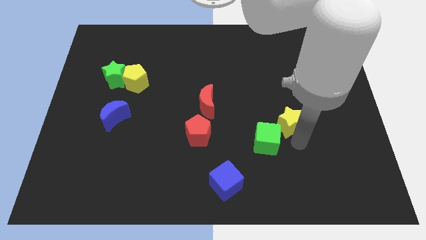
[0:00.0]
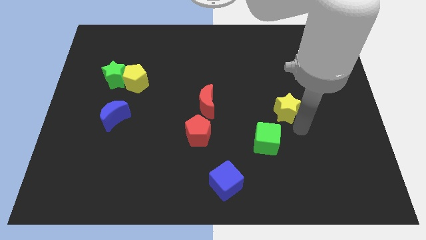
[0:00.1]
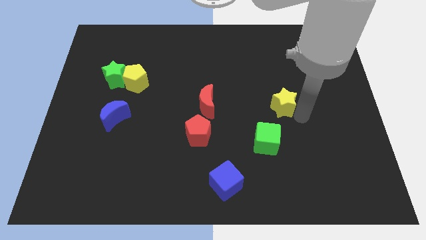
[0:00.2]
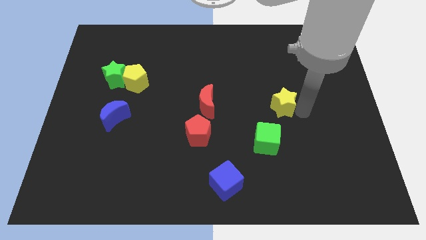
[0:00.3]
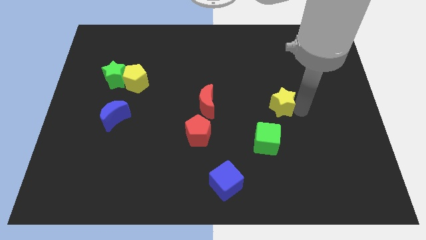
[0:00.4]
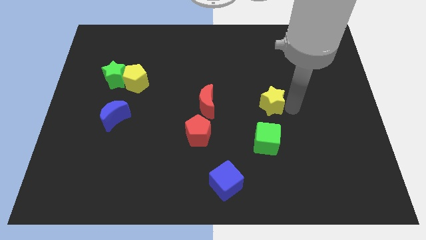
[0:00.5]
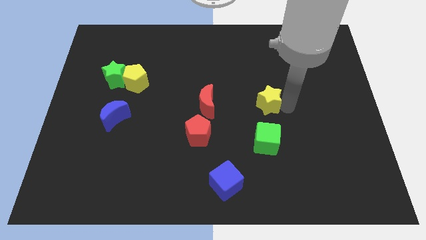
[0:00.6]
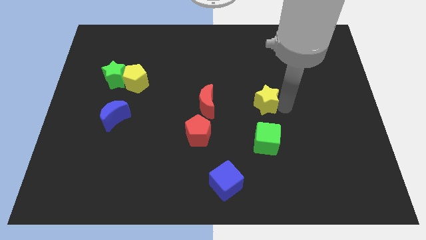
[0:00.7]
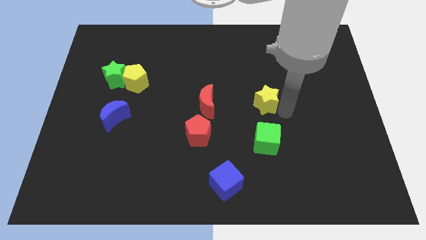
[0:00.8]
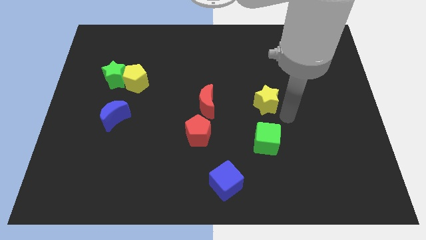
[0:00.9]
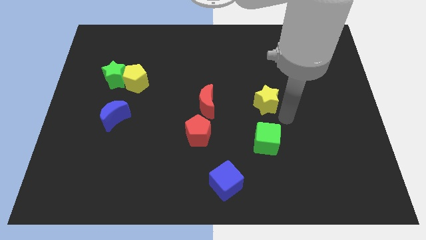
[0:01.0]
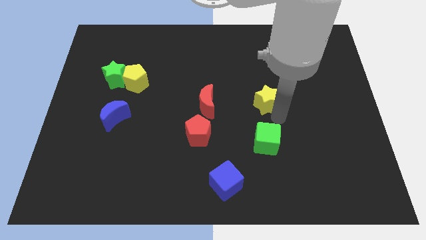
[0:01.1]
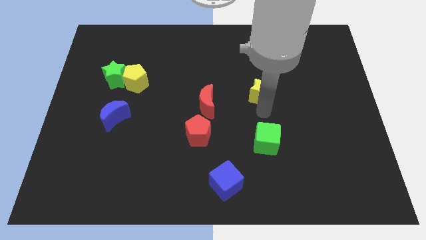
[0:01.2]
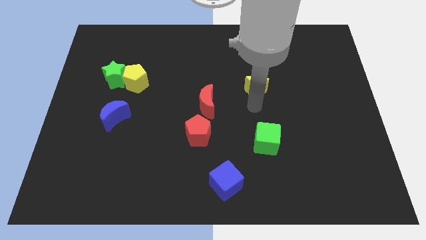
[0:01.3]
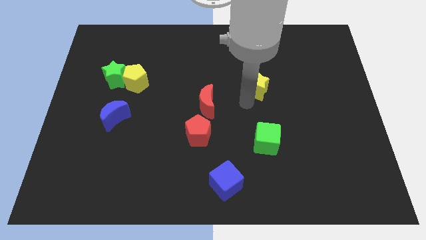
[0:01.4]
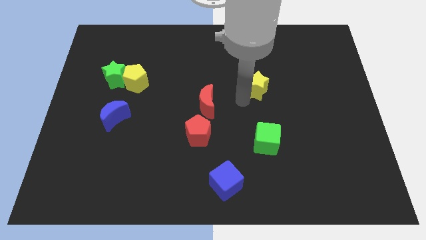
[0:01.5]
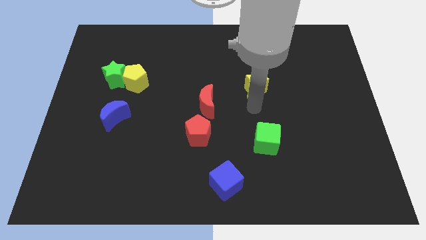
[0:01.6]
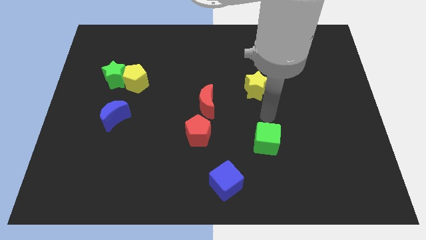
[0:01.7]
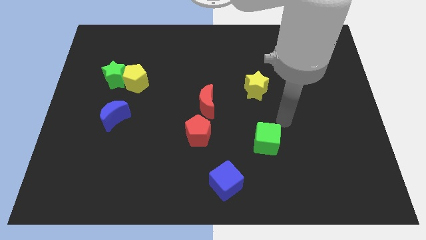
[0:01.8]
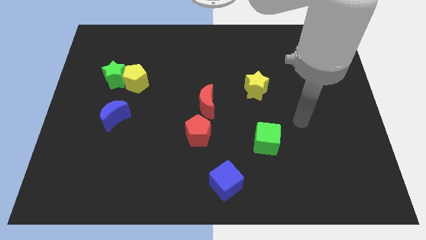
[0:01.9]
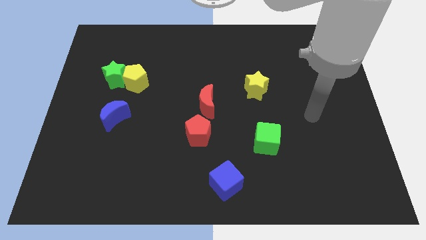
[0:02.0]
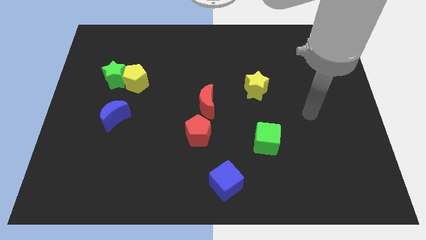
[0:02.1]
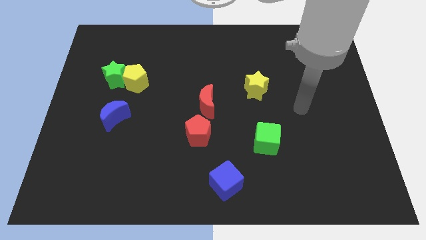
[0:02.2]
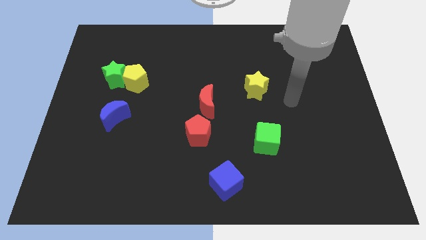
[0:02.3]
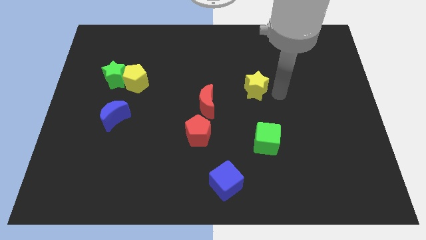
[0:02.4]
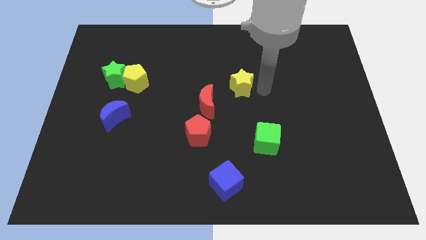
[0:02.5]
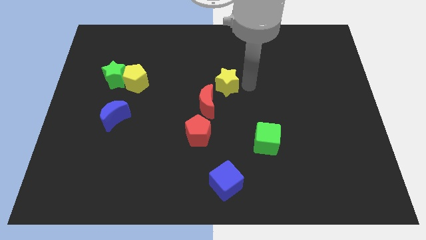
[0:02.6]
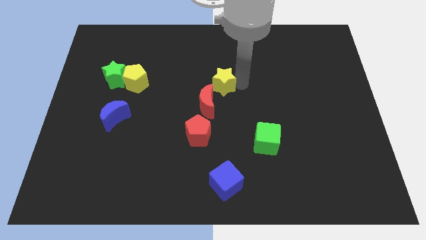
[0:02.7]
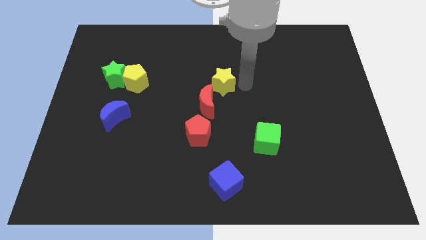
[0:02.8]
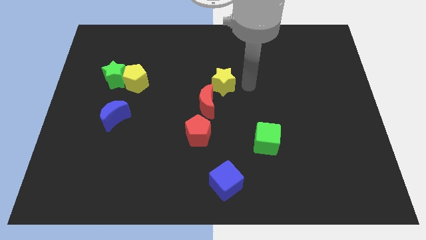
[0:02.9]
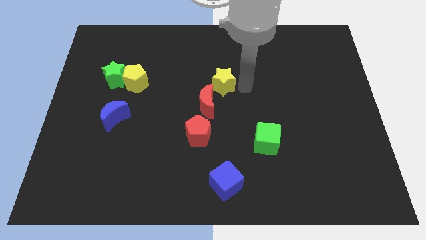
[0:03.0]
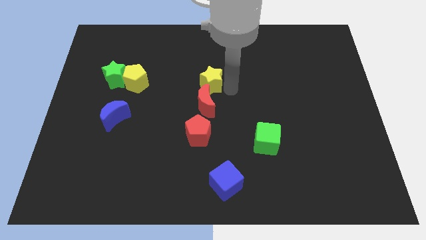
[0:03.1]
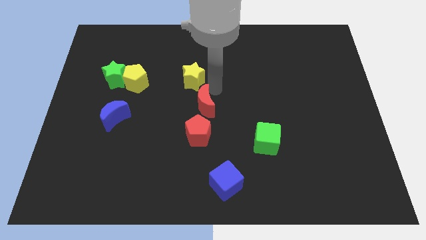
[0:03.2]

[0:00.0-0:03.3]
put the yellow star on the top side of the red crescent

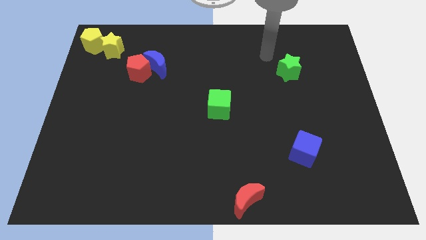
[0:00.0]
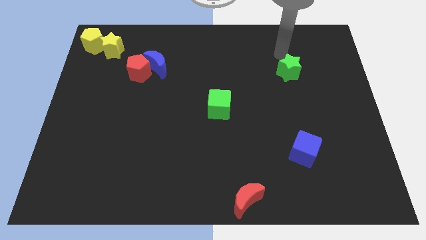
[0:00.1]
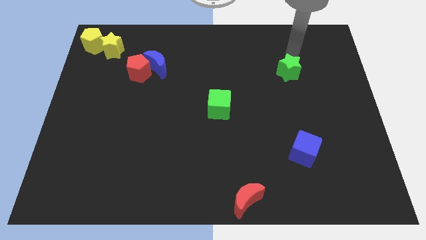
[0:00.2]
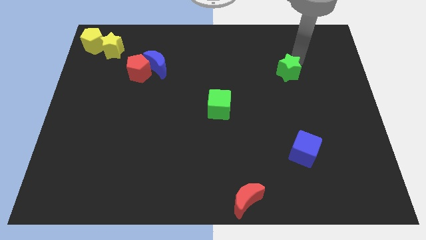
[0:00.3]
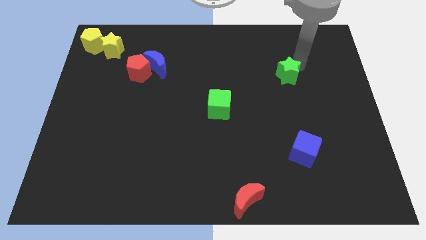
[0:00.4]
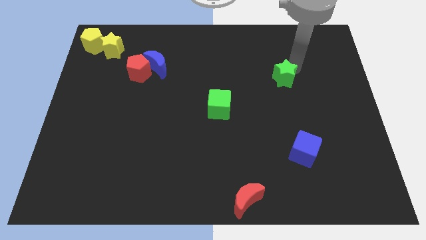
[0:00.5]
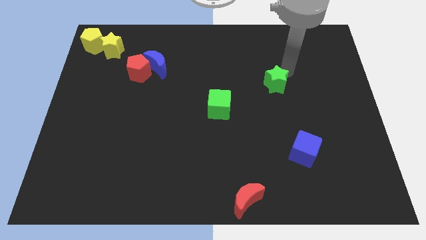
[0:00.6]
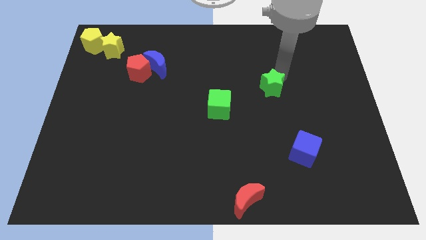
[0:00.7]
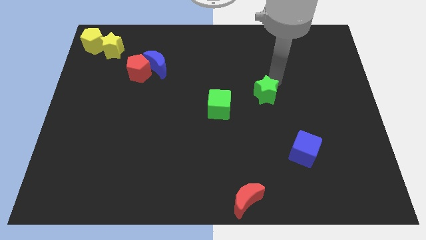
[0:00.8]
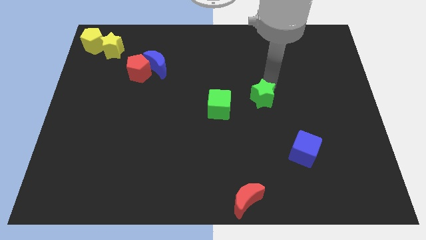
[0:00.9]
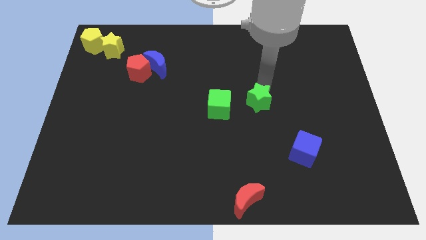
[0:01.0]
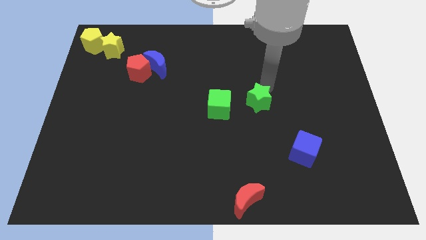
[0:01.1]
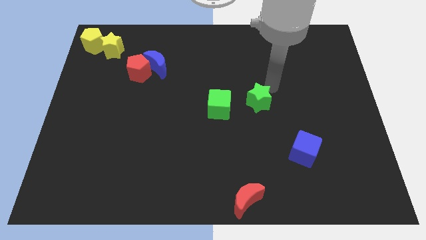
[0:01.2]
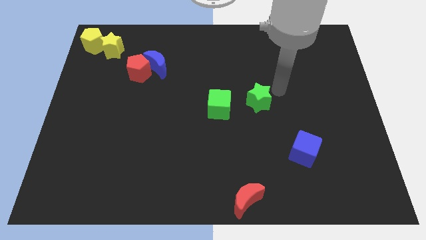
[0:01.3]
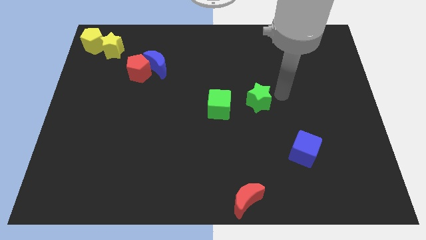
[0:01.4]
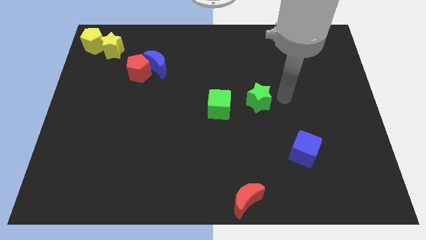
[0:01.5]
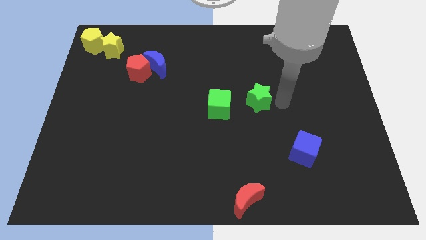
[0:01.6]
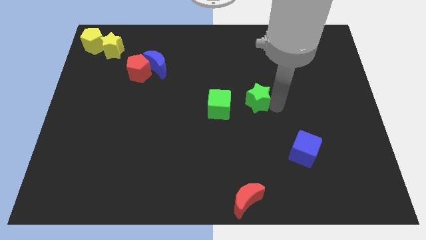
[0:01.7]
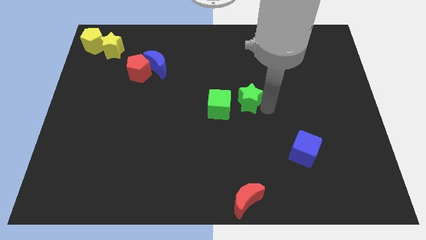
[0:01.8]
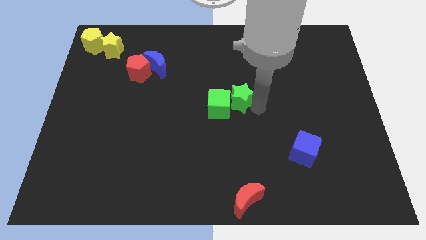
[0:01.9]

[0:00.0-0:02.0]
move green star right to the green cube

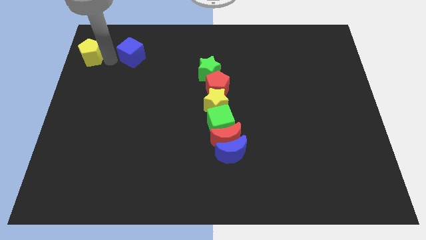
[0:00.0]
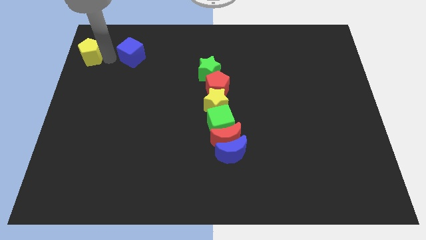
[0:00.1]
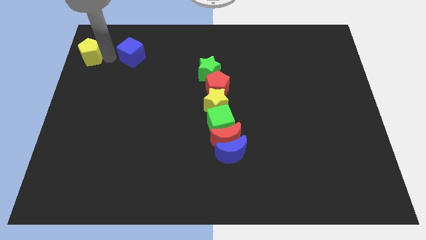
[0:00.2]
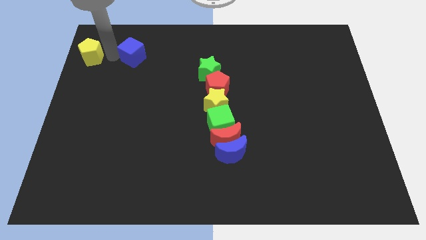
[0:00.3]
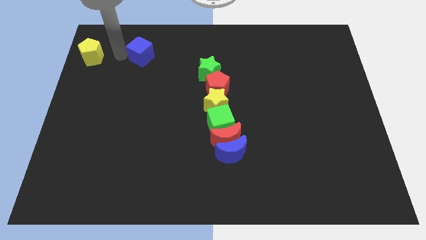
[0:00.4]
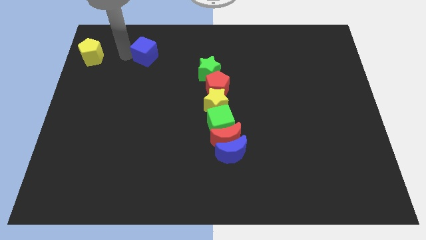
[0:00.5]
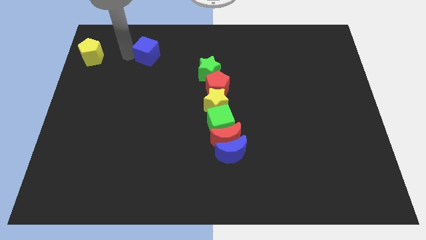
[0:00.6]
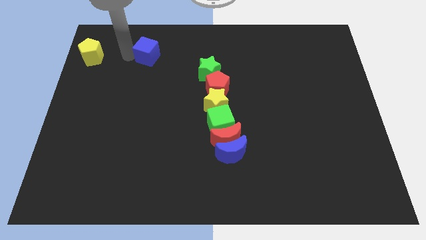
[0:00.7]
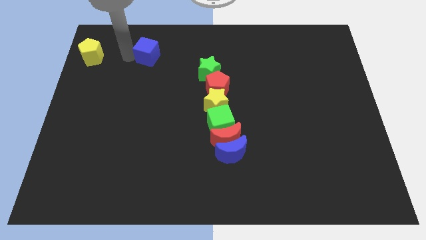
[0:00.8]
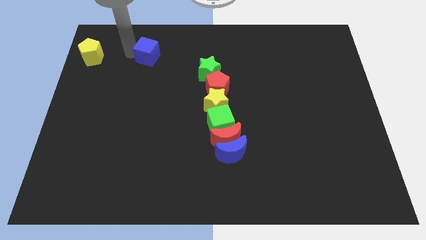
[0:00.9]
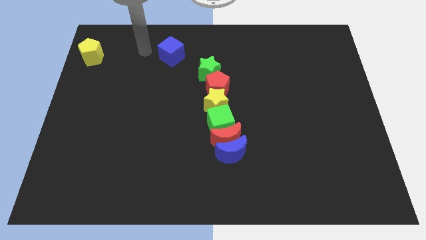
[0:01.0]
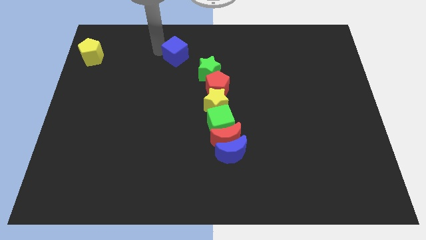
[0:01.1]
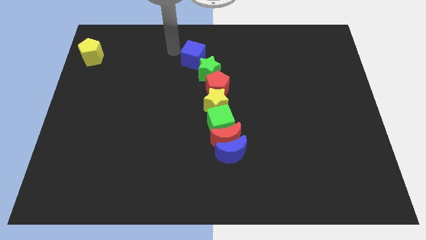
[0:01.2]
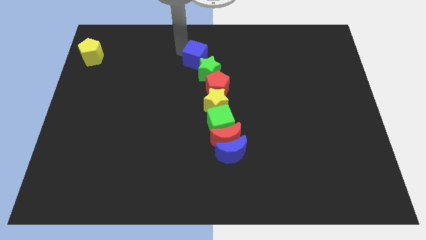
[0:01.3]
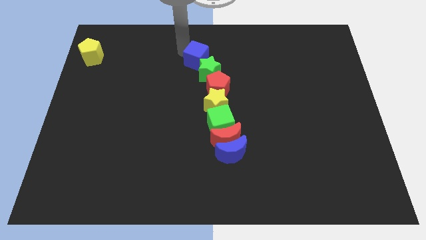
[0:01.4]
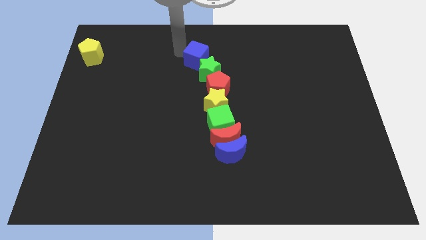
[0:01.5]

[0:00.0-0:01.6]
place the blue cube above the green star

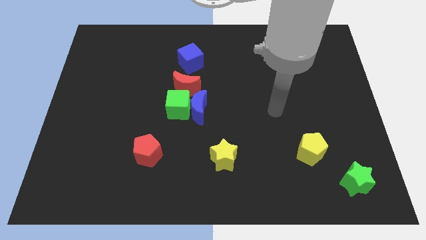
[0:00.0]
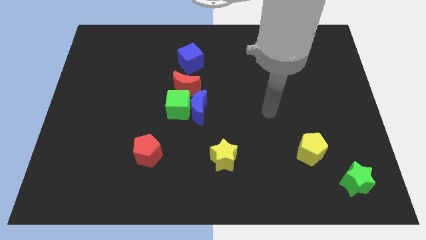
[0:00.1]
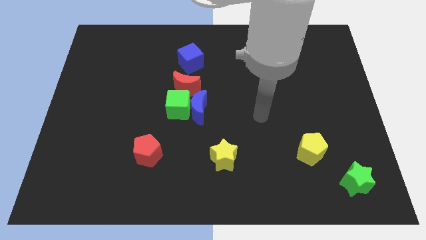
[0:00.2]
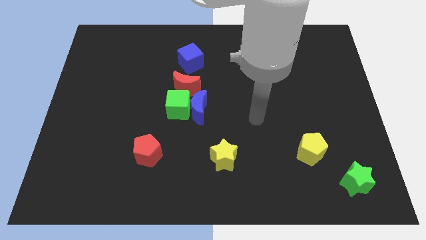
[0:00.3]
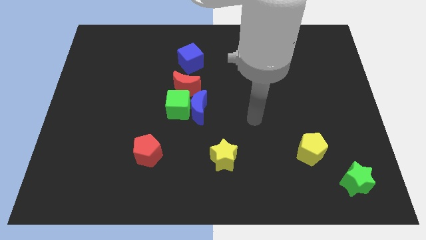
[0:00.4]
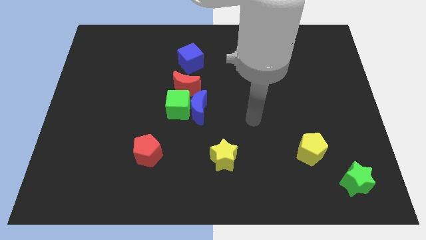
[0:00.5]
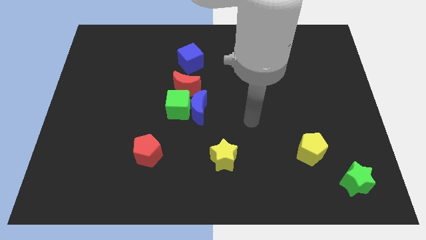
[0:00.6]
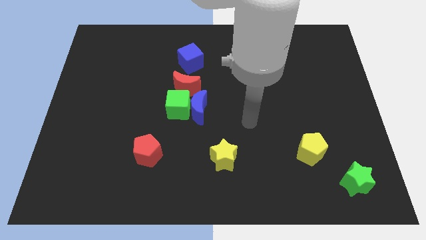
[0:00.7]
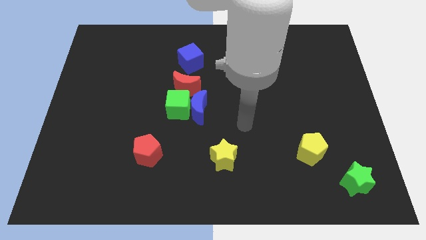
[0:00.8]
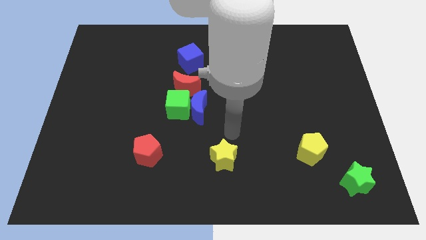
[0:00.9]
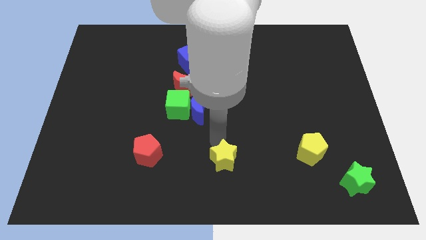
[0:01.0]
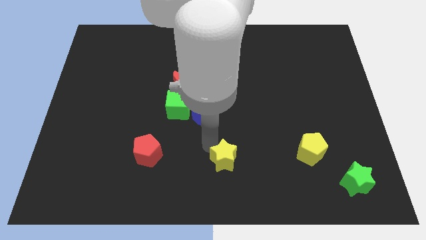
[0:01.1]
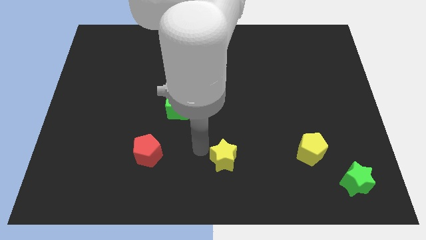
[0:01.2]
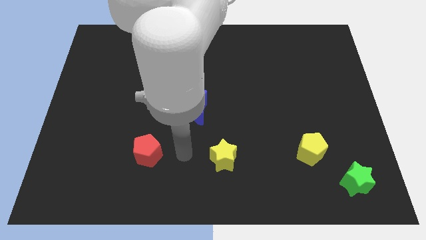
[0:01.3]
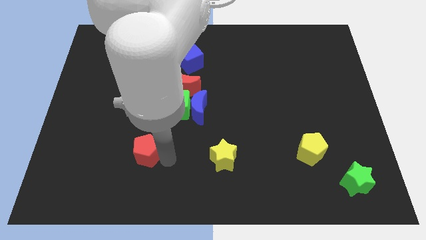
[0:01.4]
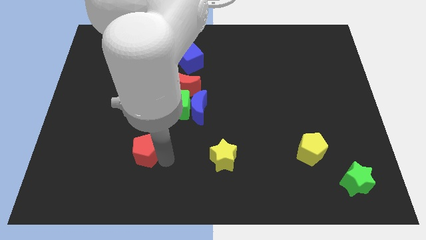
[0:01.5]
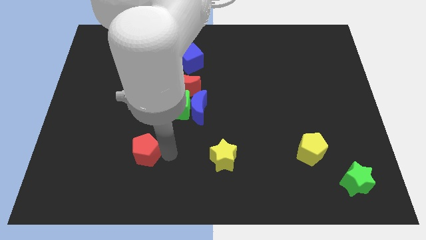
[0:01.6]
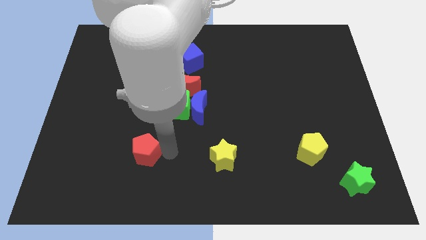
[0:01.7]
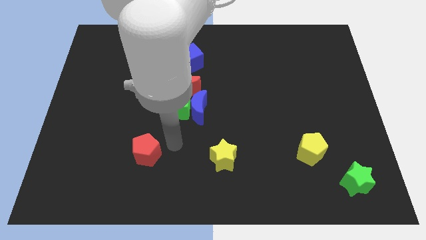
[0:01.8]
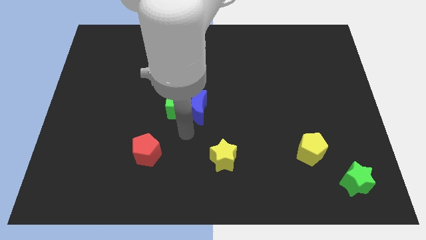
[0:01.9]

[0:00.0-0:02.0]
slightly move the red pentagon to the left of the board
